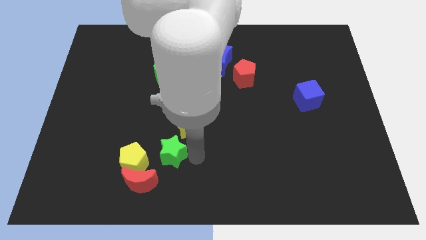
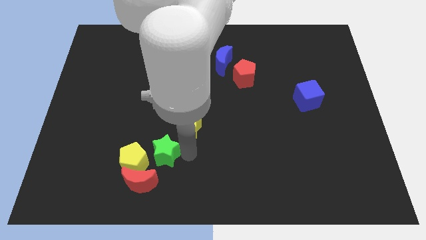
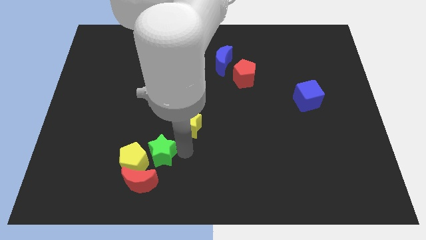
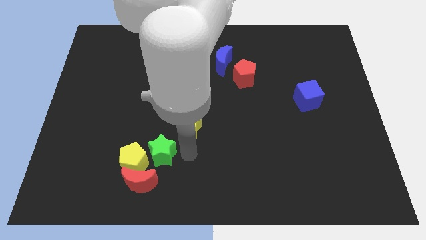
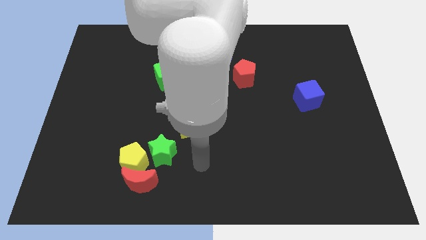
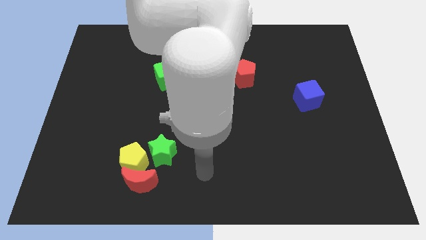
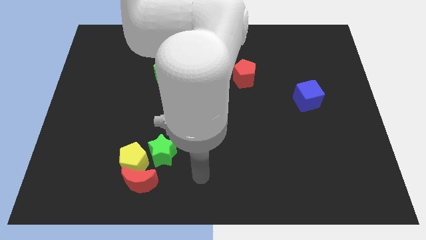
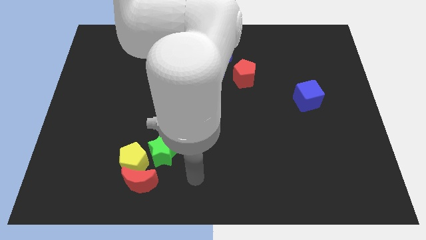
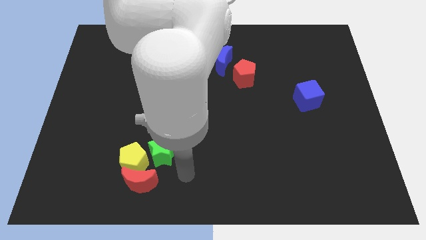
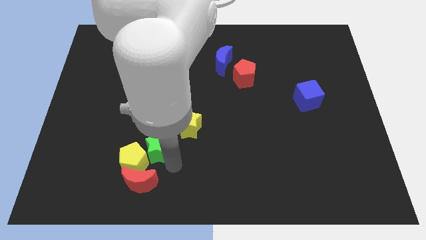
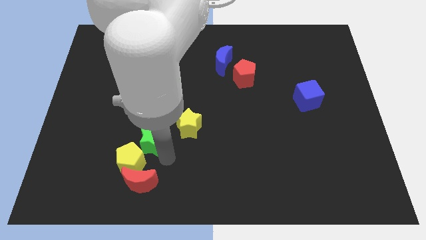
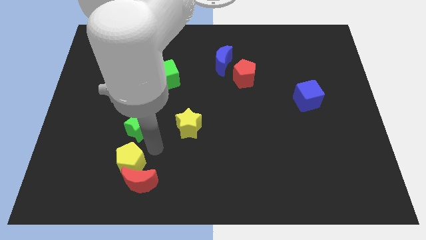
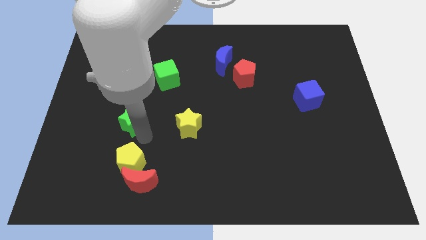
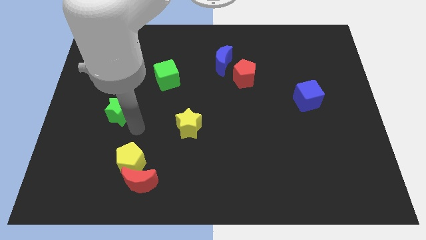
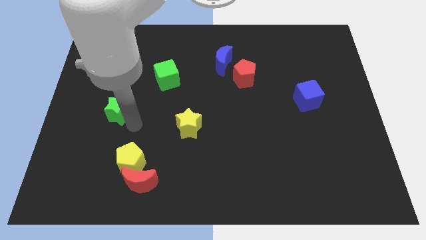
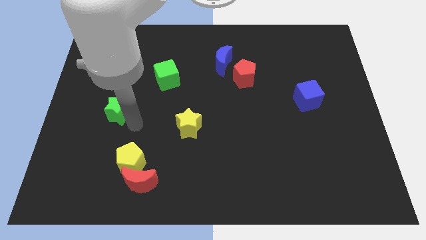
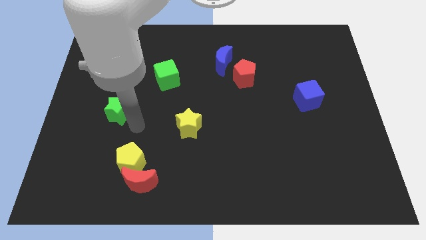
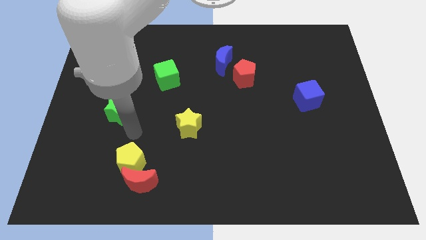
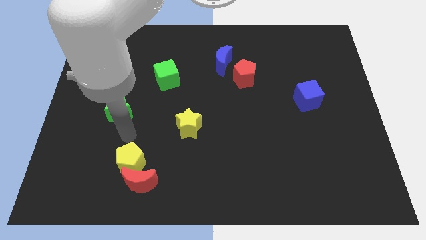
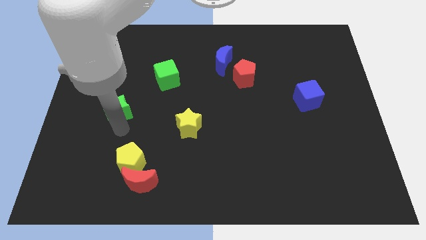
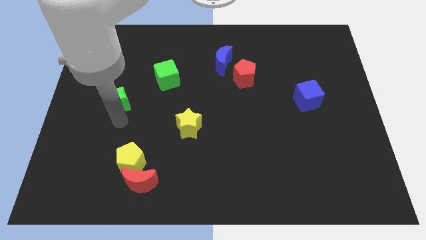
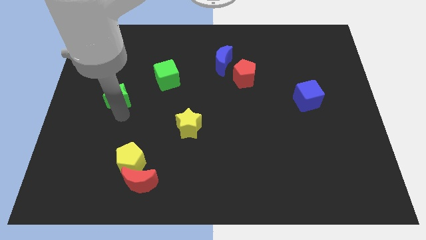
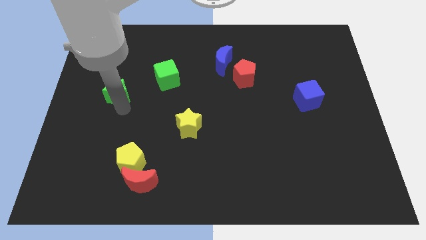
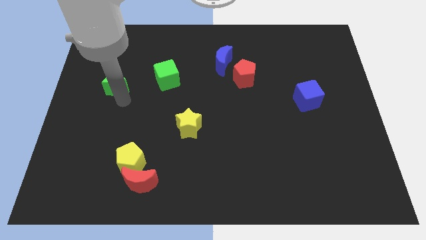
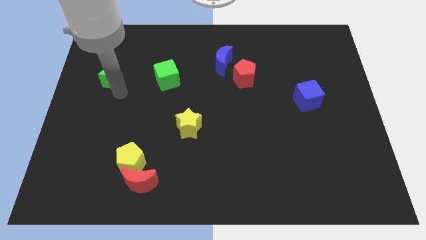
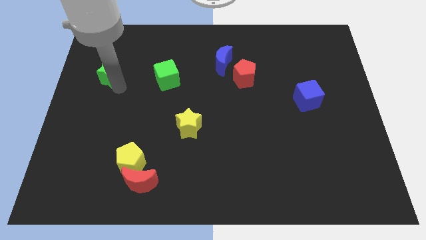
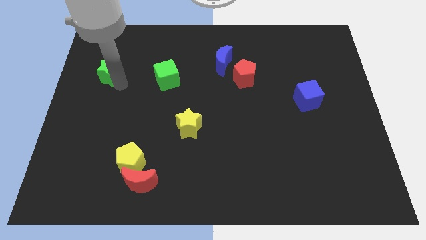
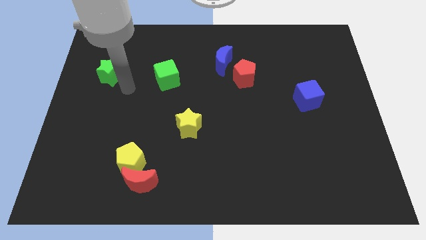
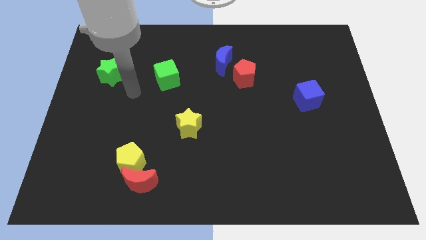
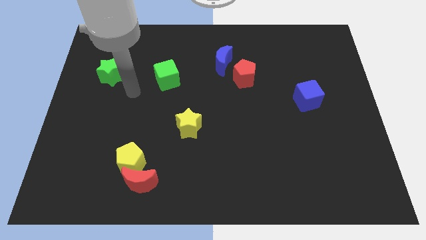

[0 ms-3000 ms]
place green star to the left of green cube

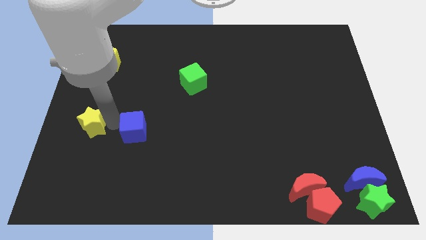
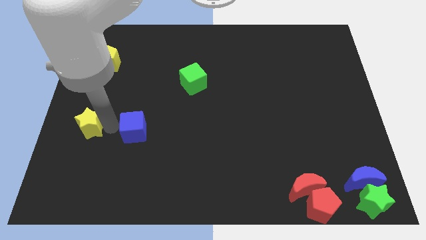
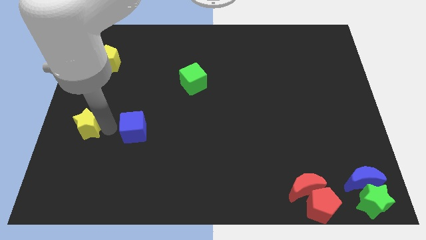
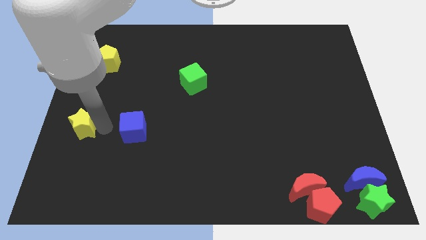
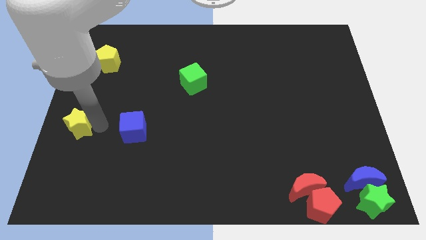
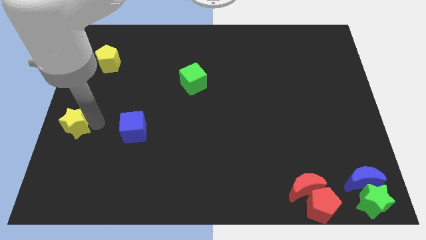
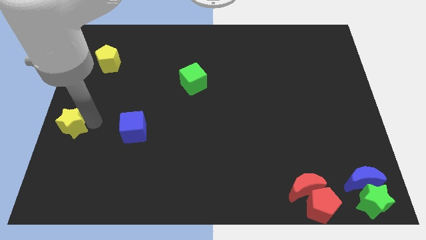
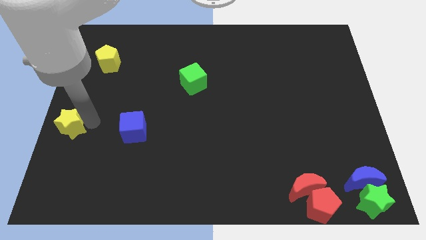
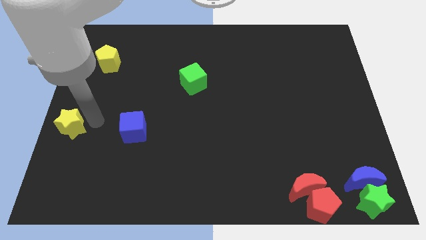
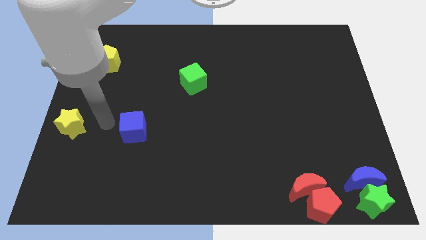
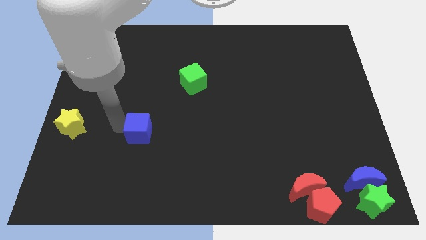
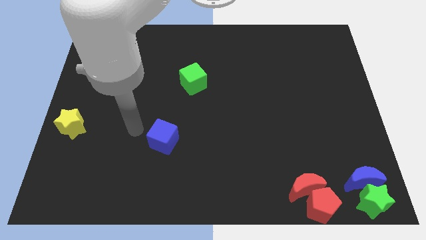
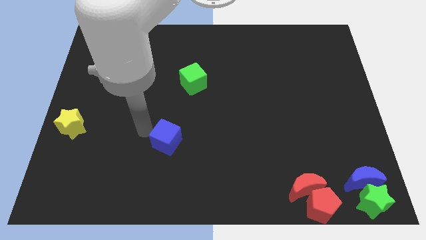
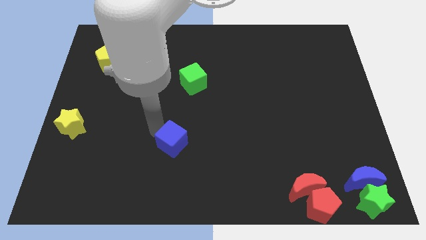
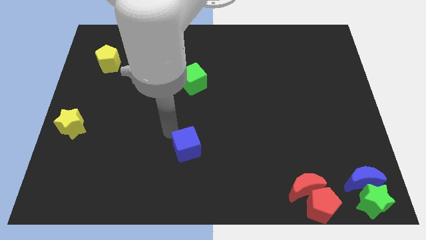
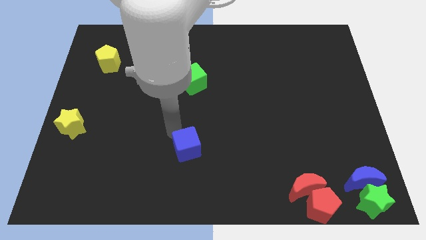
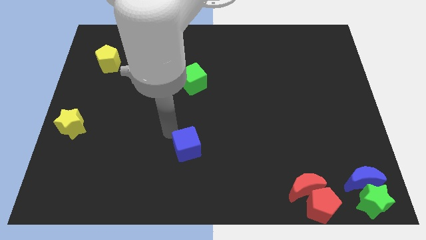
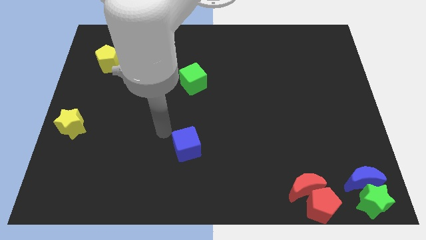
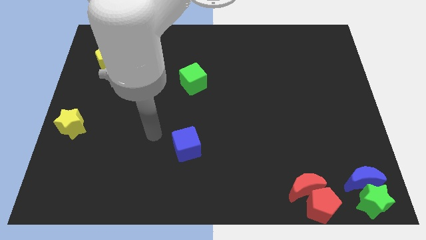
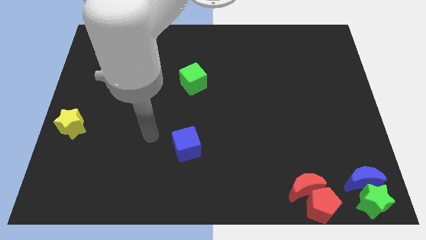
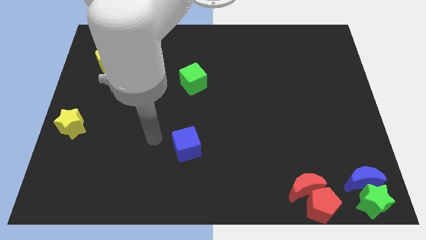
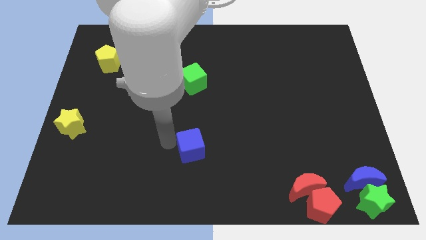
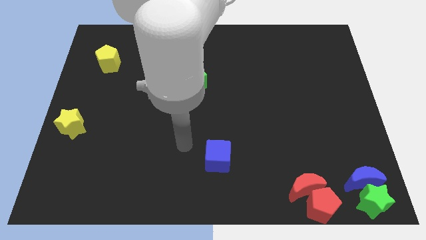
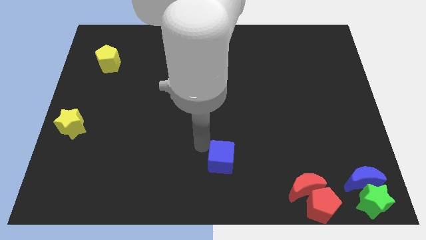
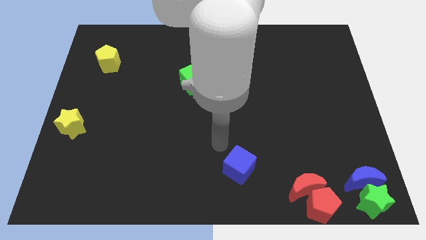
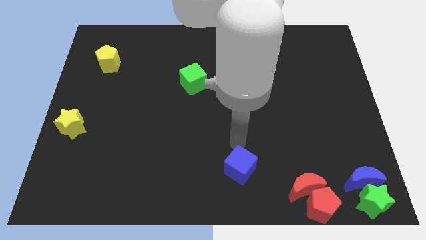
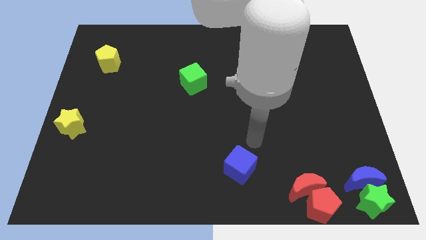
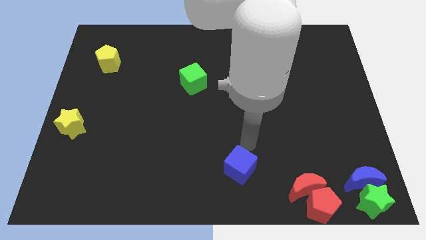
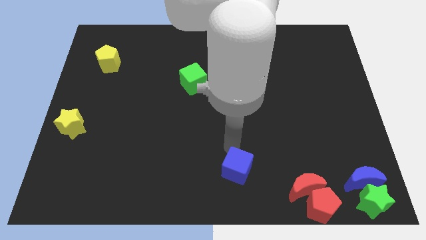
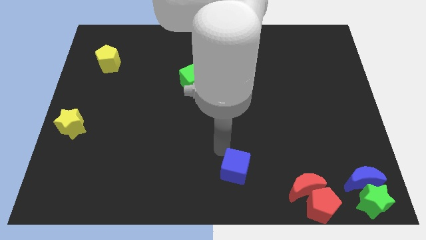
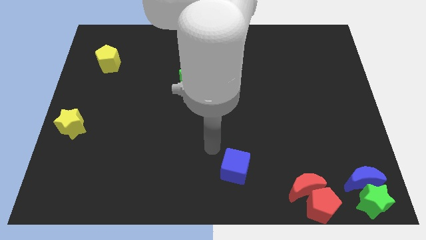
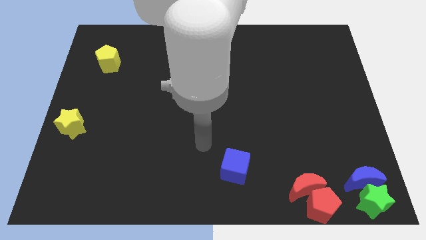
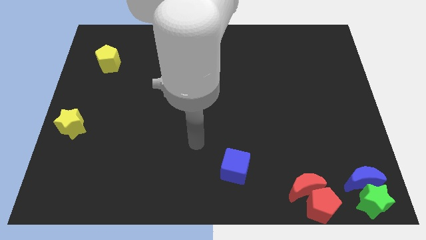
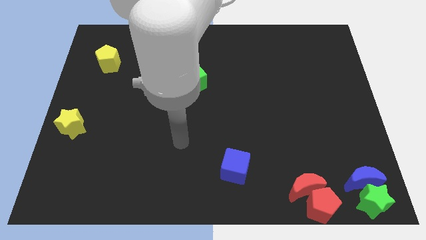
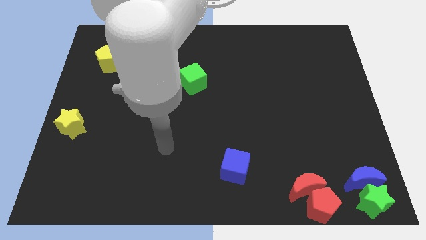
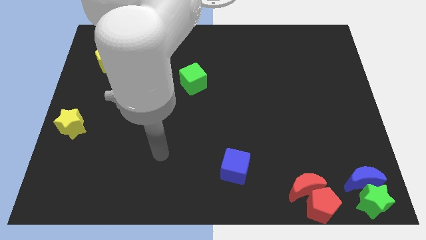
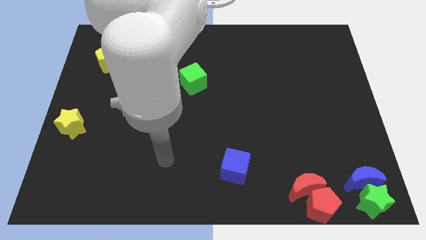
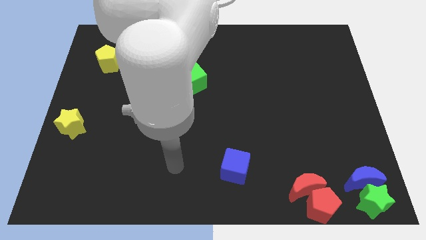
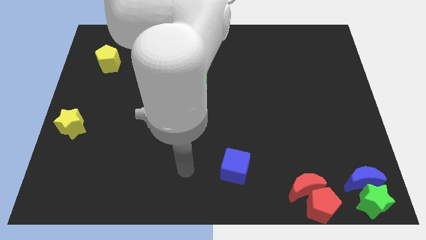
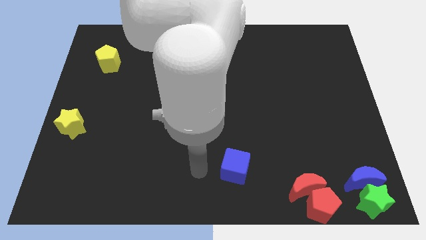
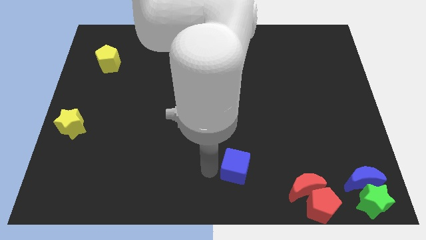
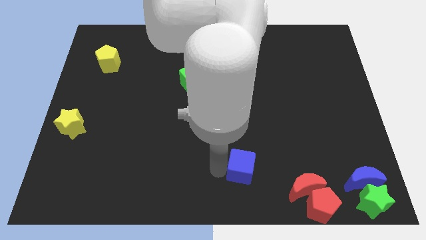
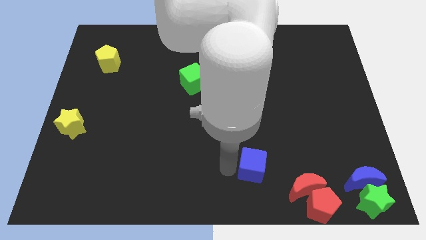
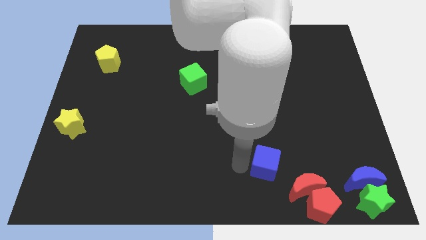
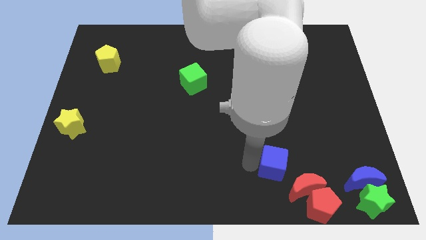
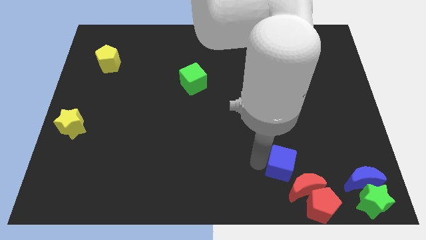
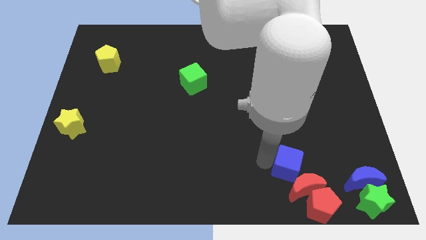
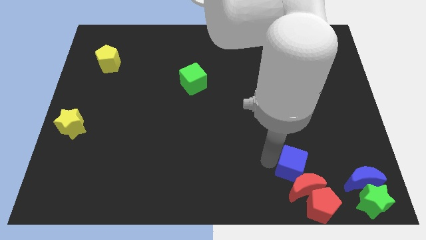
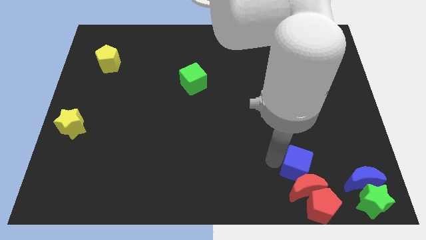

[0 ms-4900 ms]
place the blue cube to the top of red crescent

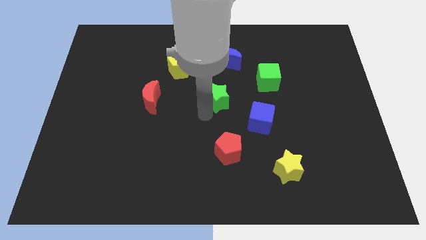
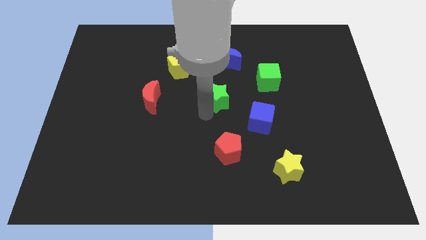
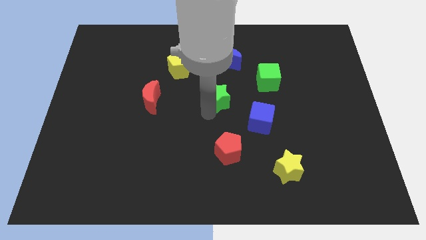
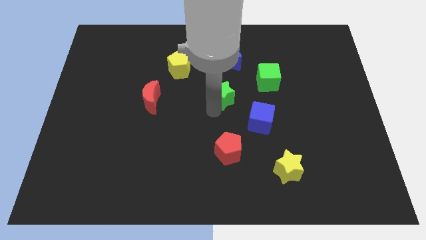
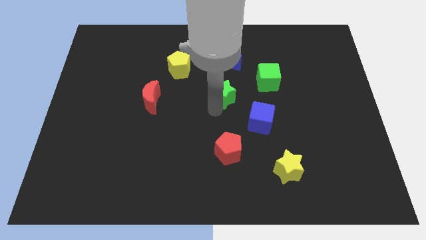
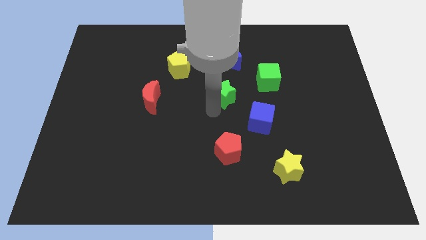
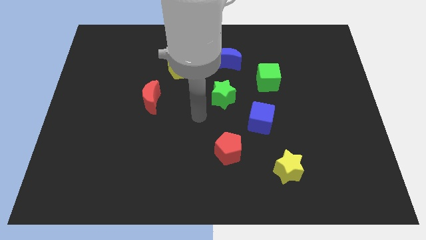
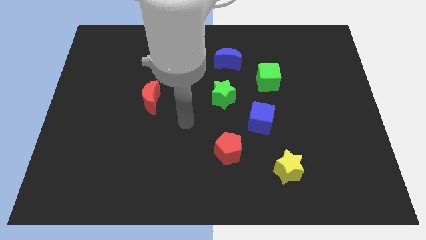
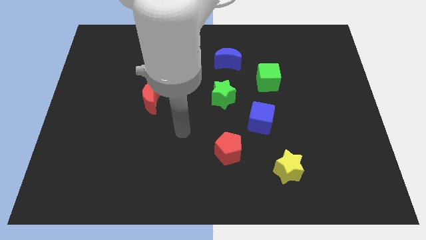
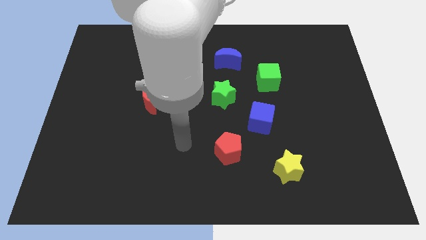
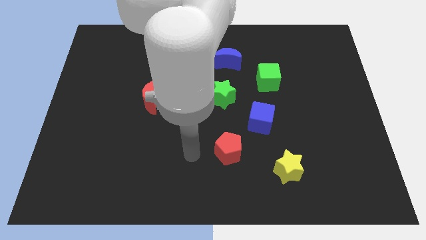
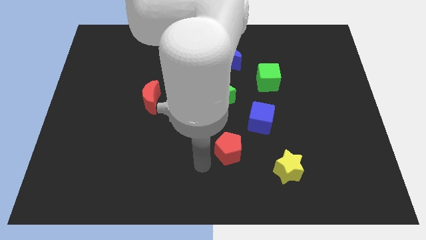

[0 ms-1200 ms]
push the green star at the bottom of the blue crescent
